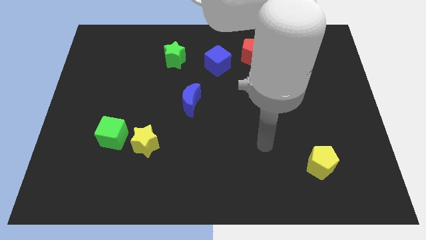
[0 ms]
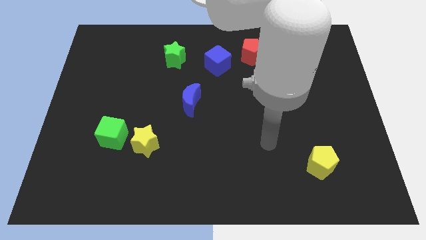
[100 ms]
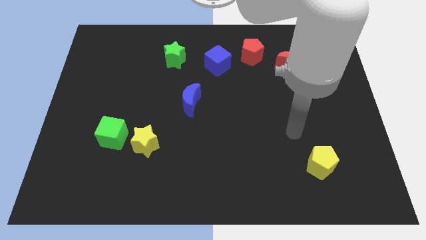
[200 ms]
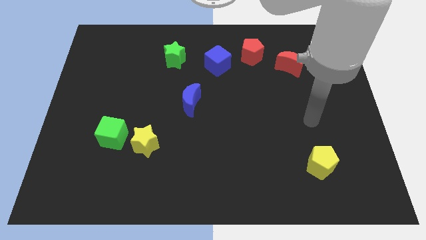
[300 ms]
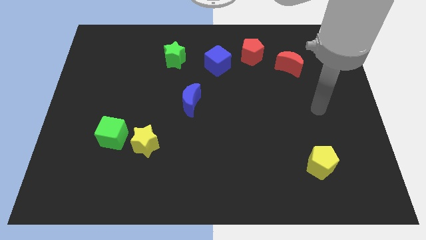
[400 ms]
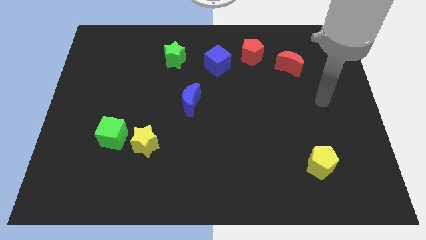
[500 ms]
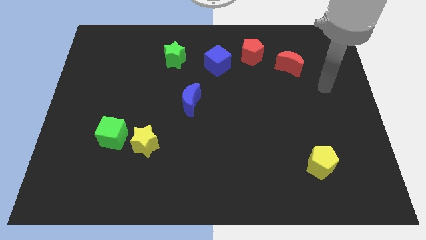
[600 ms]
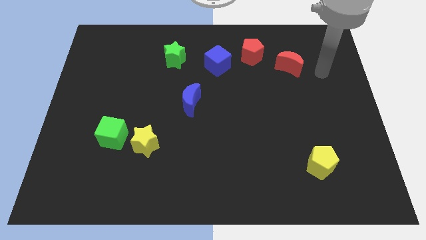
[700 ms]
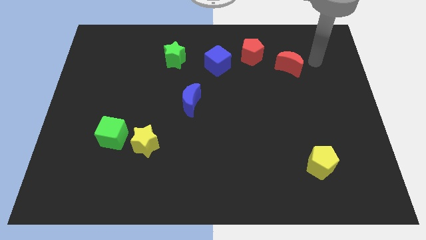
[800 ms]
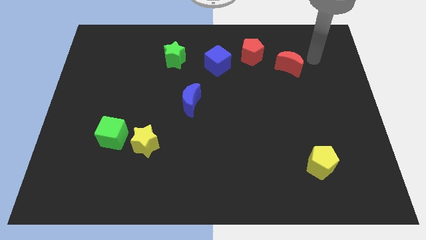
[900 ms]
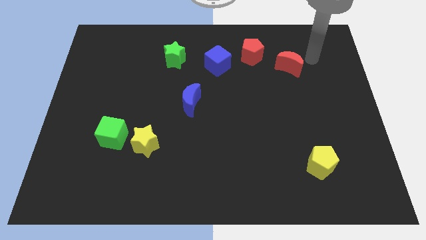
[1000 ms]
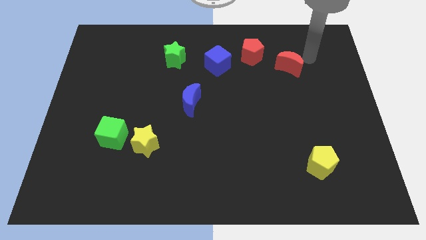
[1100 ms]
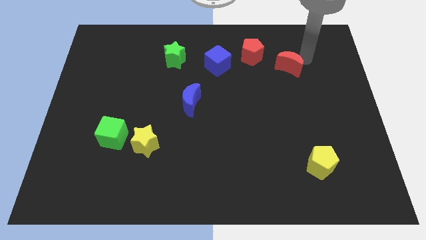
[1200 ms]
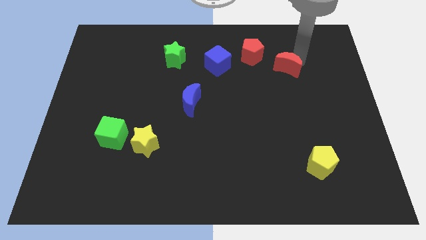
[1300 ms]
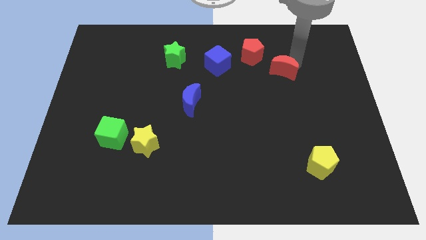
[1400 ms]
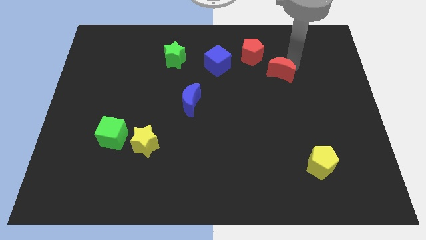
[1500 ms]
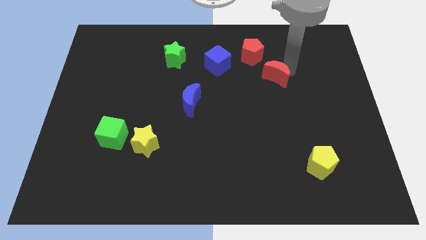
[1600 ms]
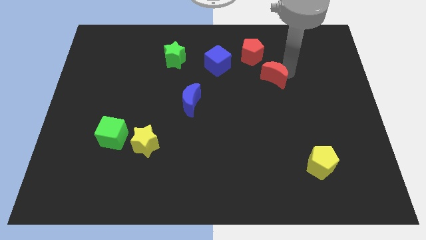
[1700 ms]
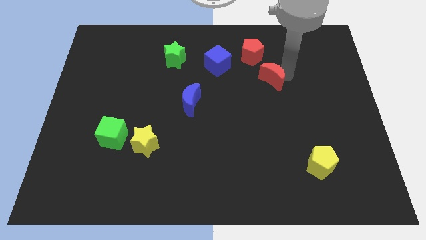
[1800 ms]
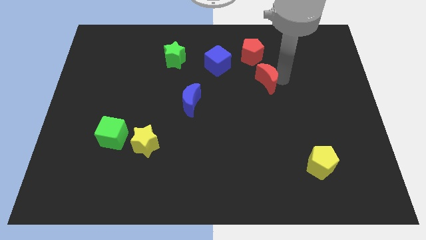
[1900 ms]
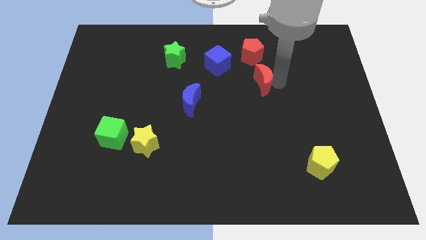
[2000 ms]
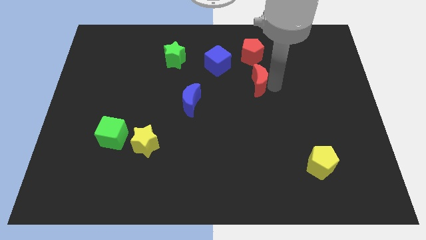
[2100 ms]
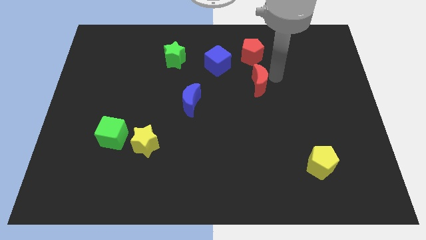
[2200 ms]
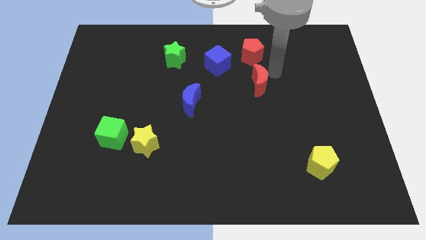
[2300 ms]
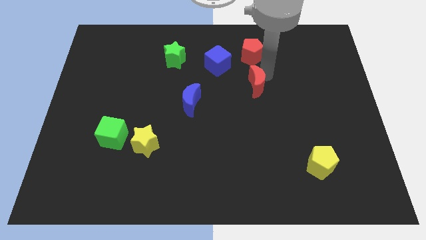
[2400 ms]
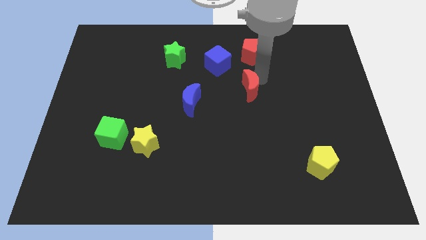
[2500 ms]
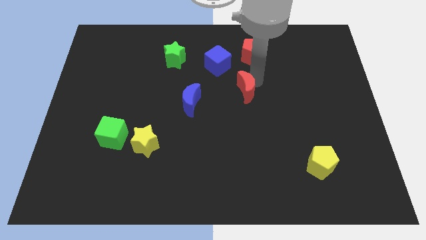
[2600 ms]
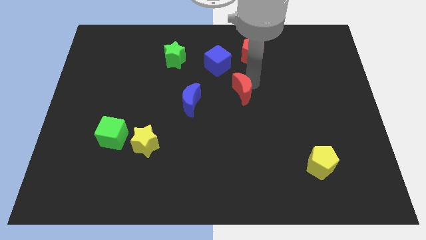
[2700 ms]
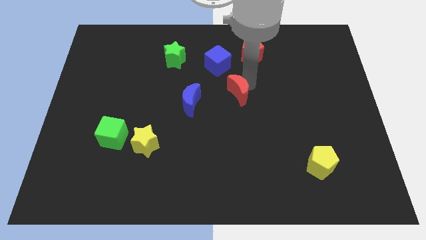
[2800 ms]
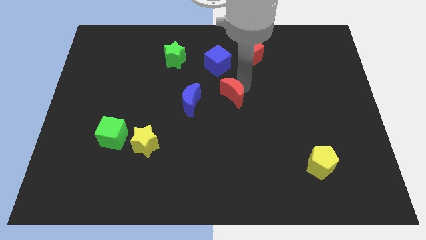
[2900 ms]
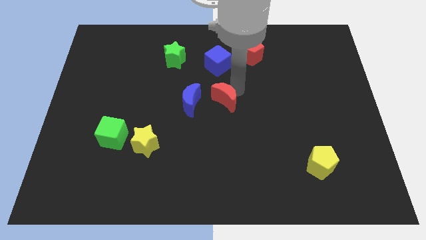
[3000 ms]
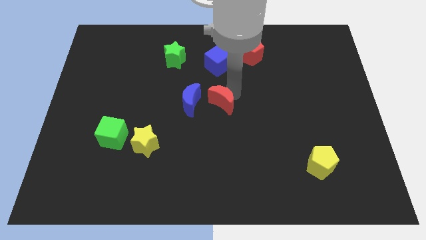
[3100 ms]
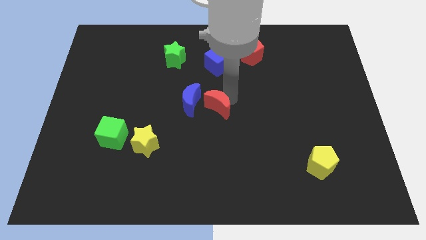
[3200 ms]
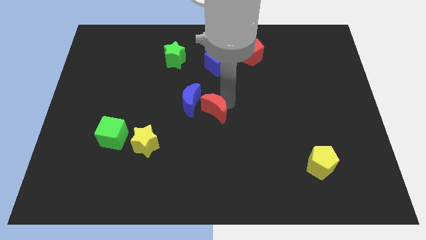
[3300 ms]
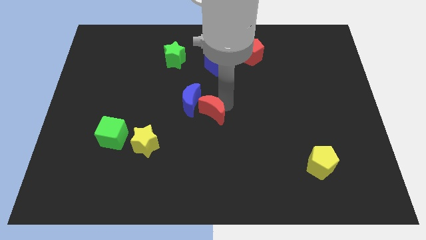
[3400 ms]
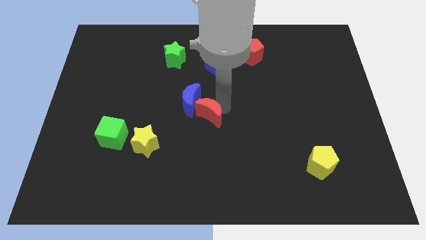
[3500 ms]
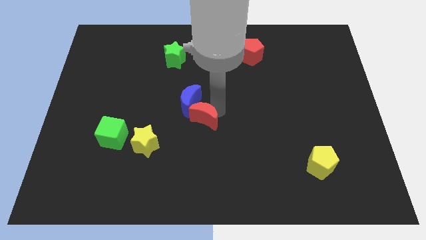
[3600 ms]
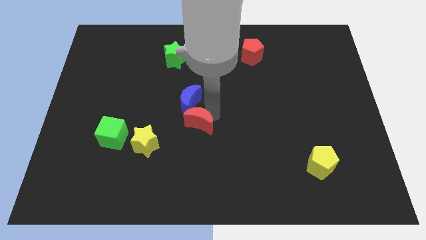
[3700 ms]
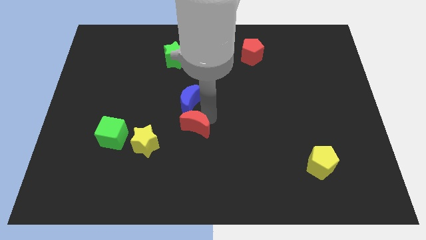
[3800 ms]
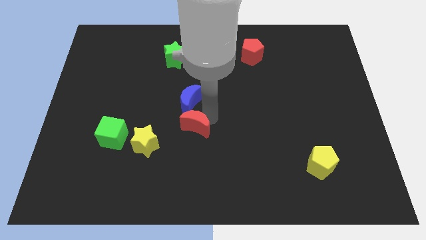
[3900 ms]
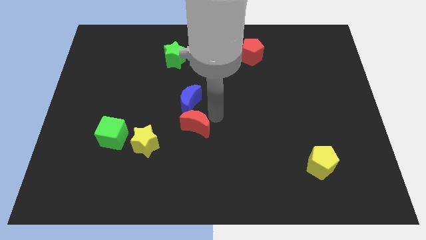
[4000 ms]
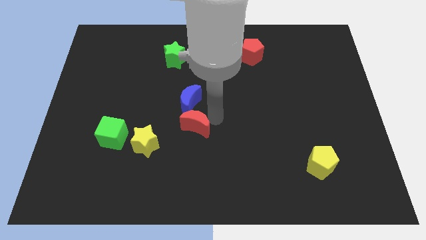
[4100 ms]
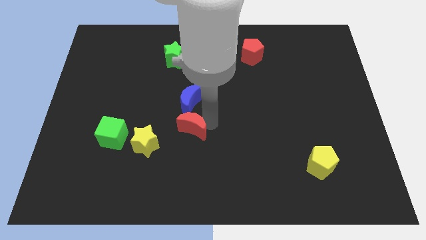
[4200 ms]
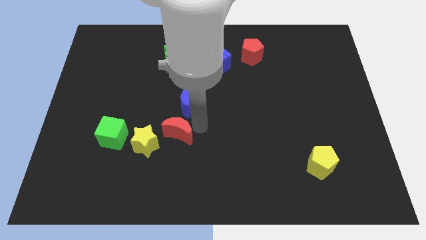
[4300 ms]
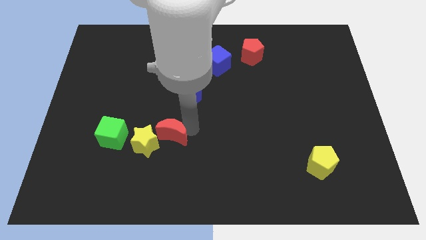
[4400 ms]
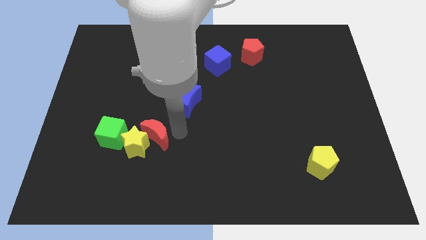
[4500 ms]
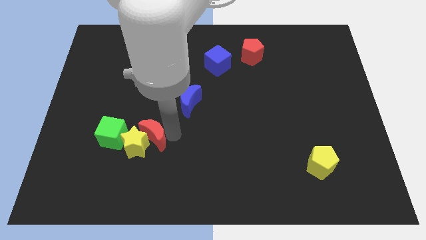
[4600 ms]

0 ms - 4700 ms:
put the red moon towards the yellow star

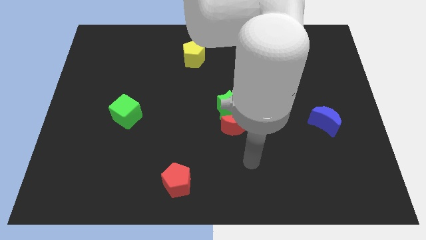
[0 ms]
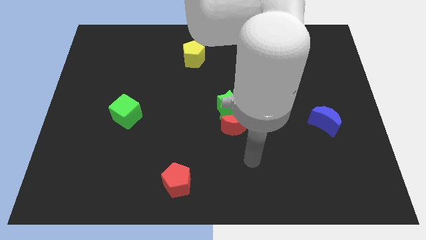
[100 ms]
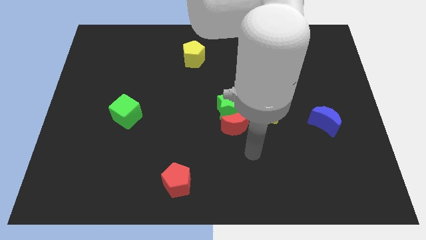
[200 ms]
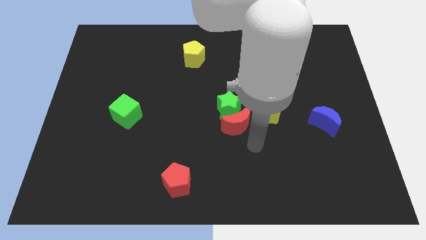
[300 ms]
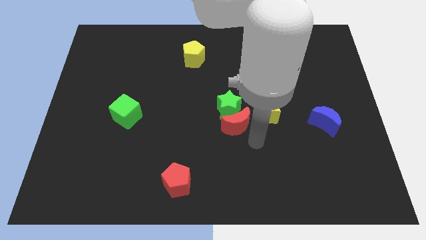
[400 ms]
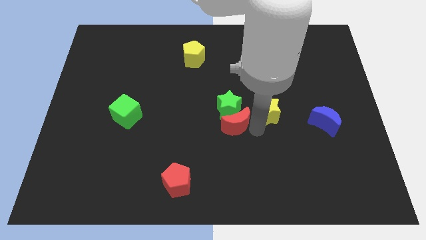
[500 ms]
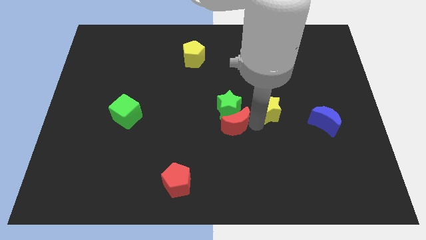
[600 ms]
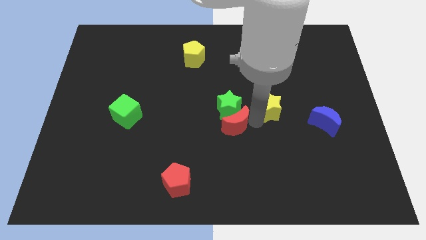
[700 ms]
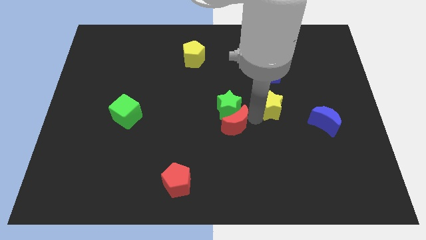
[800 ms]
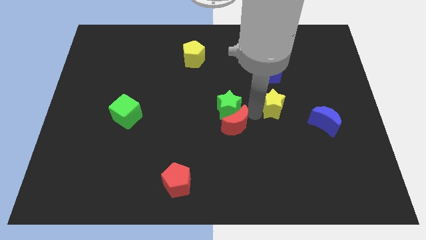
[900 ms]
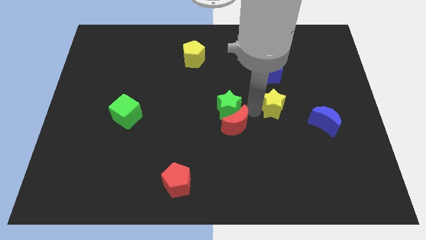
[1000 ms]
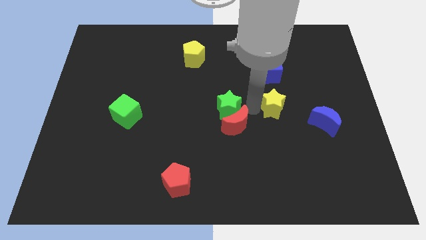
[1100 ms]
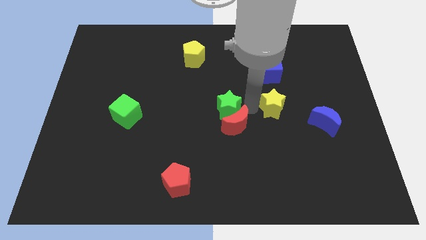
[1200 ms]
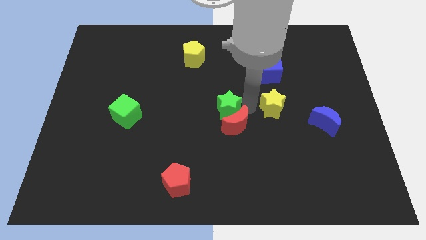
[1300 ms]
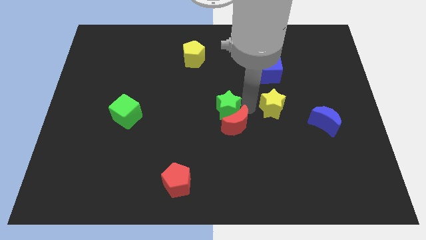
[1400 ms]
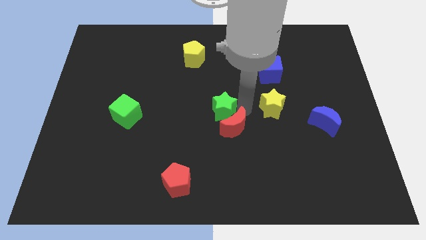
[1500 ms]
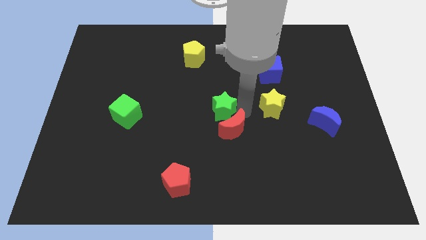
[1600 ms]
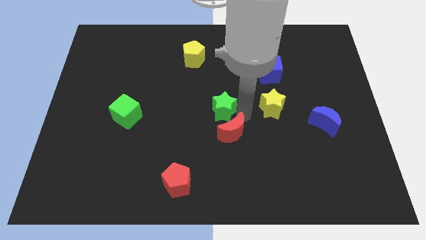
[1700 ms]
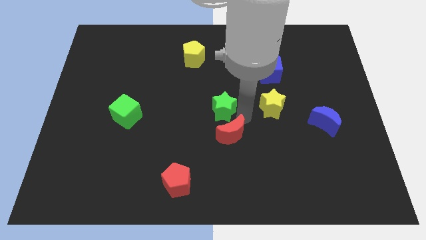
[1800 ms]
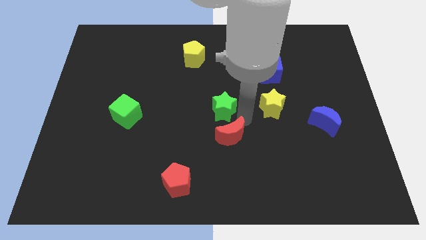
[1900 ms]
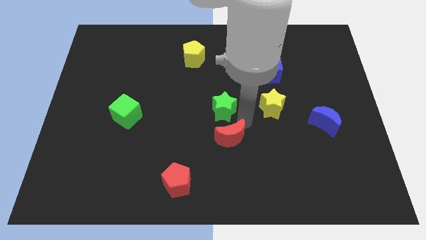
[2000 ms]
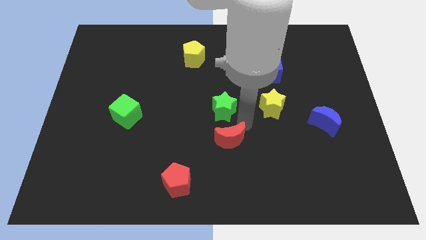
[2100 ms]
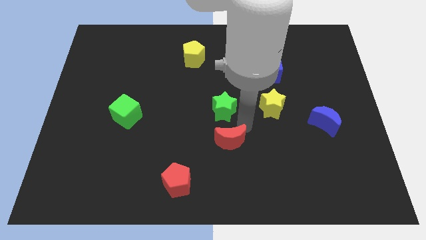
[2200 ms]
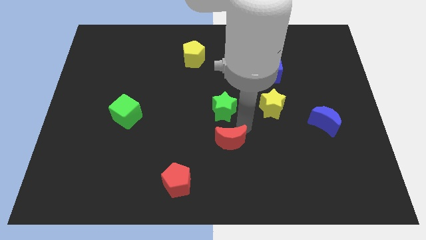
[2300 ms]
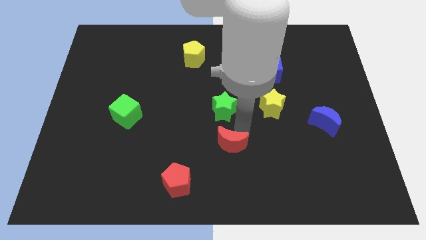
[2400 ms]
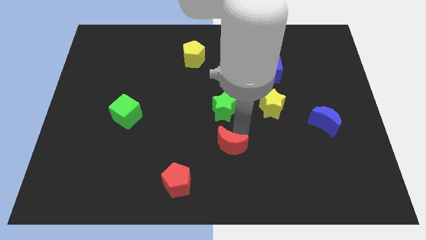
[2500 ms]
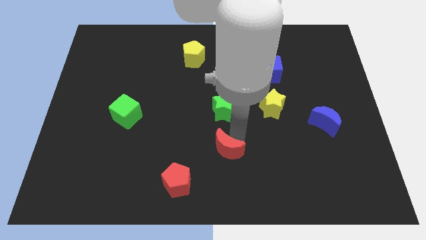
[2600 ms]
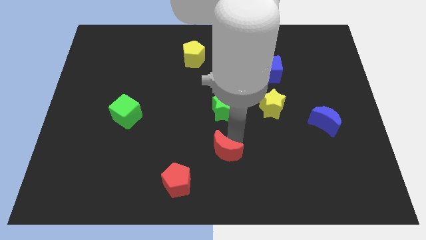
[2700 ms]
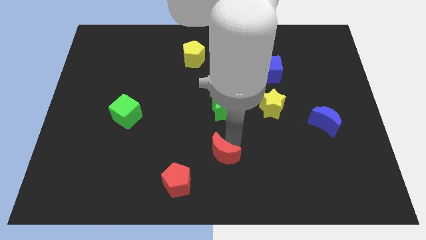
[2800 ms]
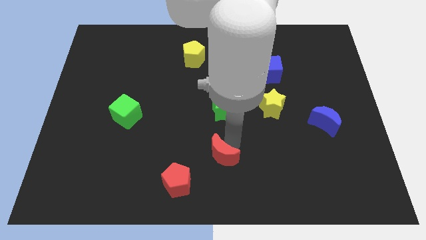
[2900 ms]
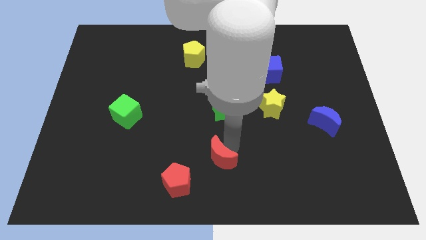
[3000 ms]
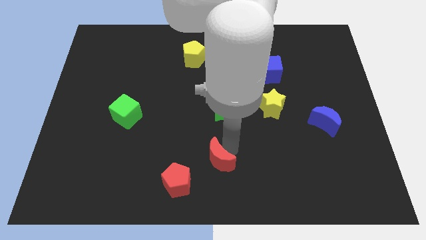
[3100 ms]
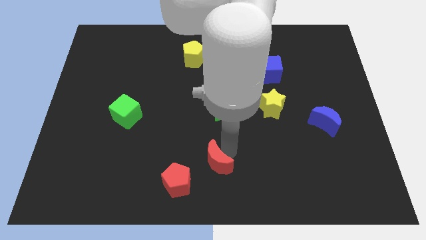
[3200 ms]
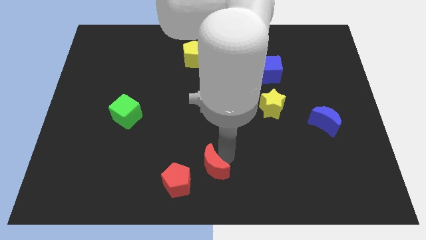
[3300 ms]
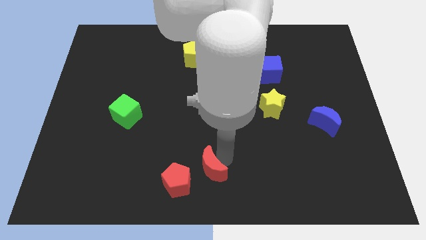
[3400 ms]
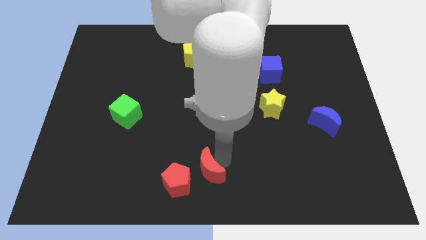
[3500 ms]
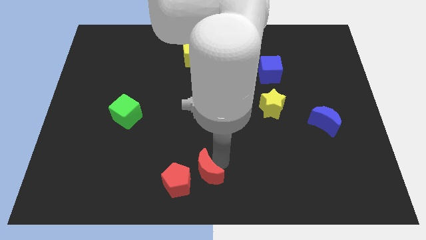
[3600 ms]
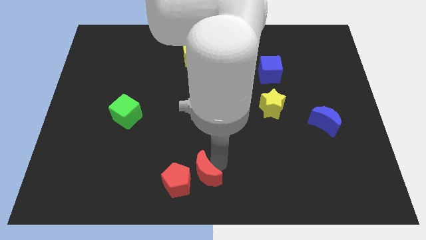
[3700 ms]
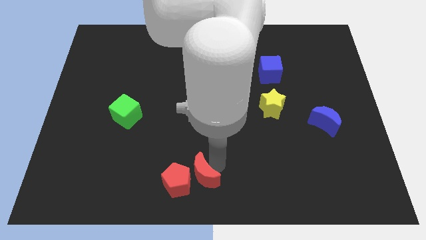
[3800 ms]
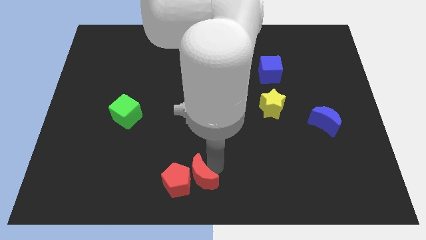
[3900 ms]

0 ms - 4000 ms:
push the red moon towards the red pentagon

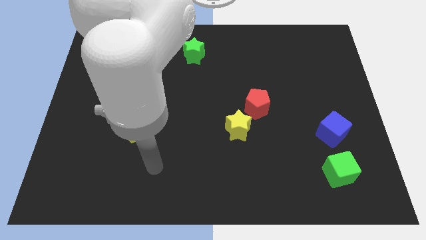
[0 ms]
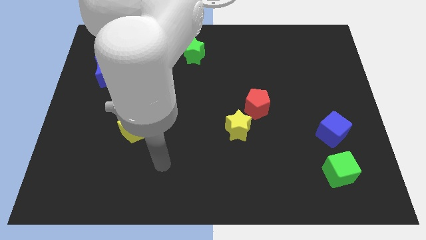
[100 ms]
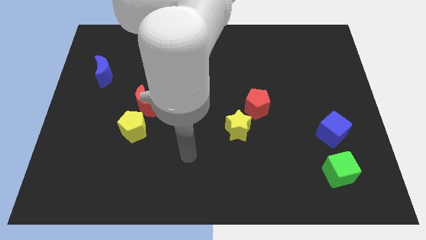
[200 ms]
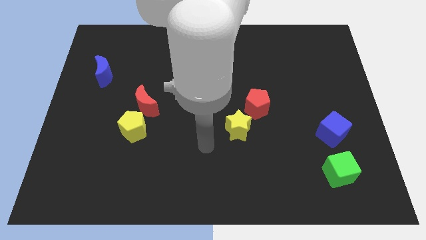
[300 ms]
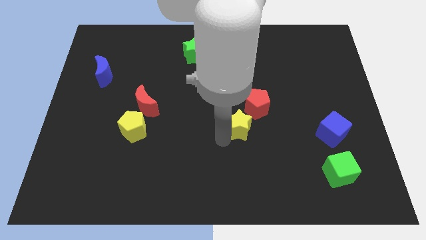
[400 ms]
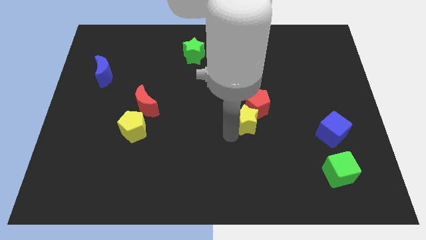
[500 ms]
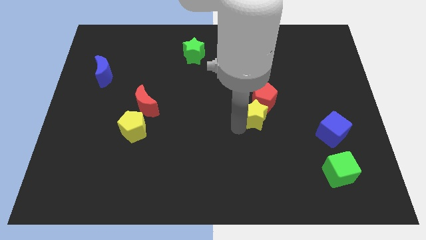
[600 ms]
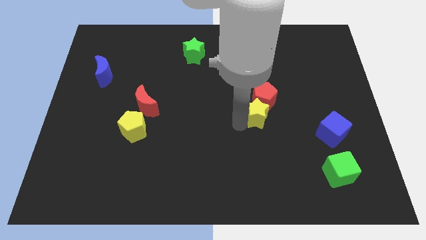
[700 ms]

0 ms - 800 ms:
move the yellow star close to the red pentagon
